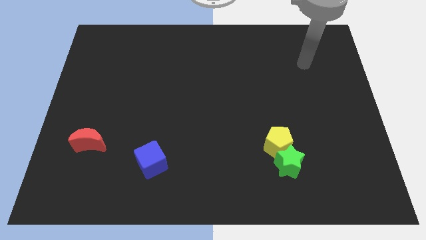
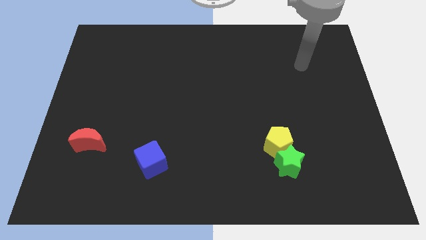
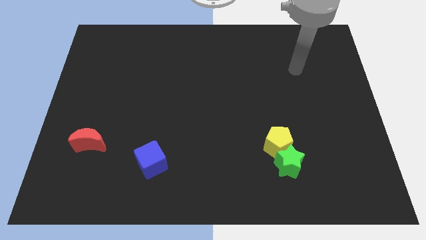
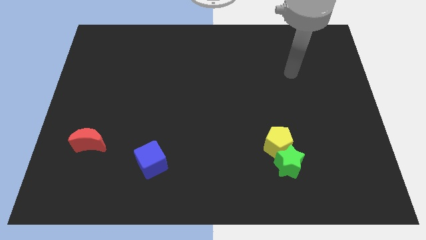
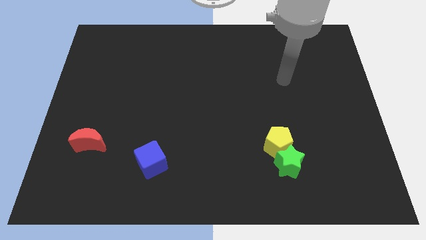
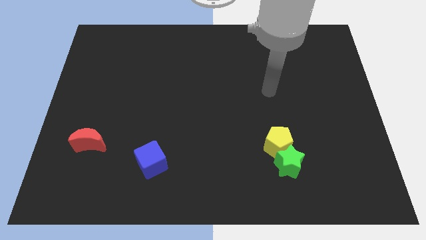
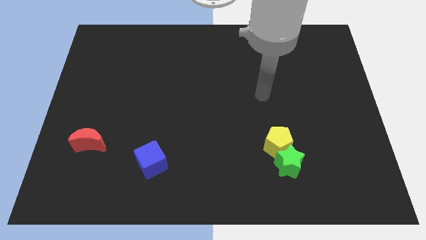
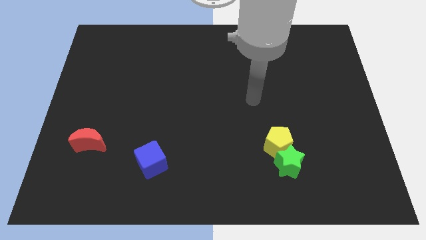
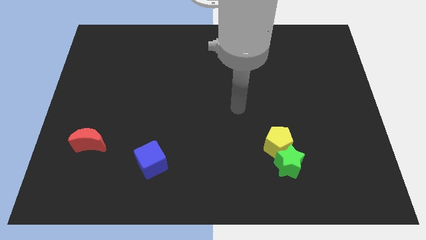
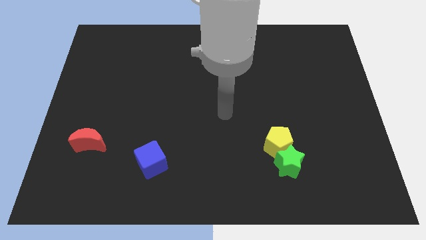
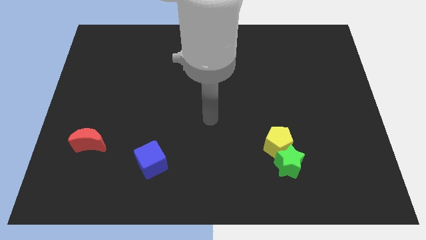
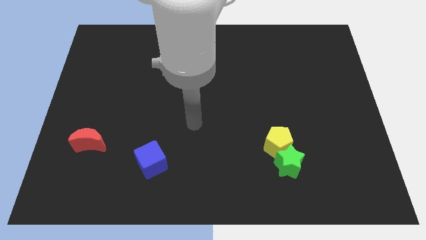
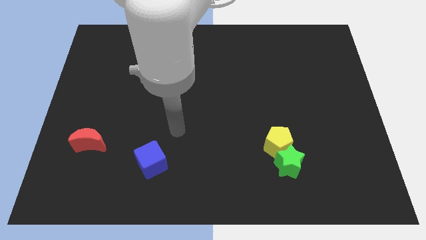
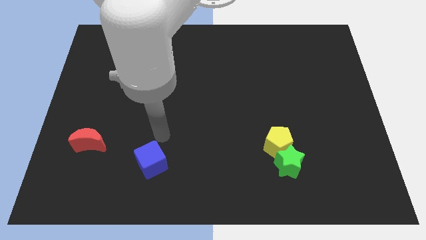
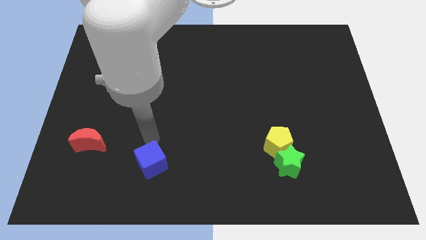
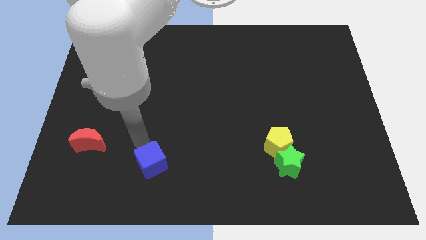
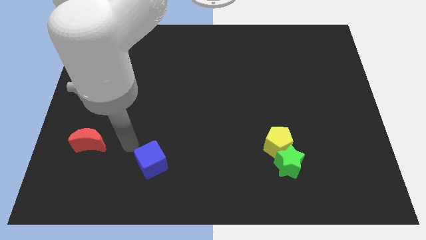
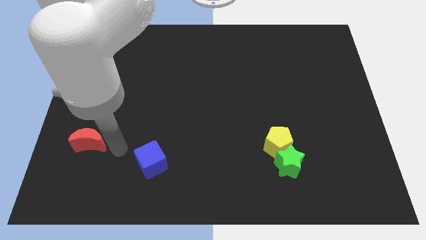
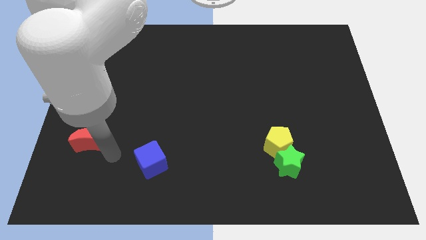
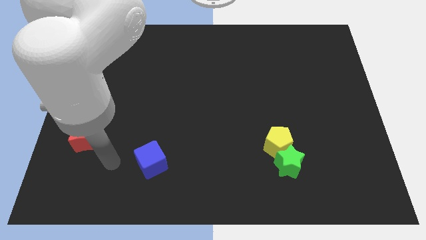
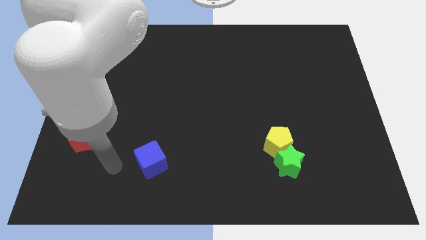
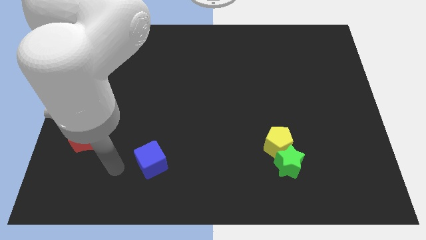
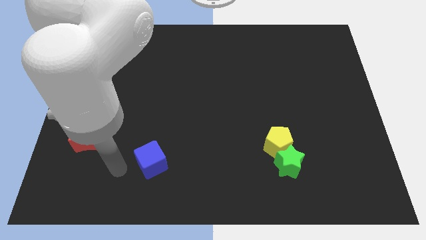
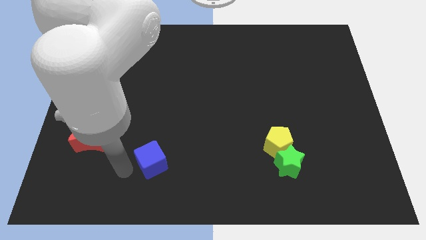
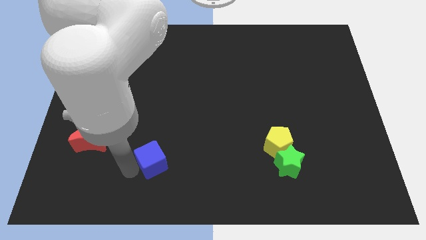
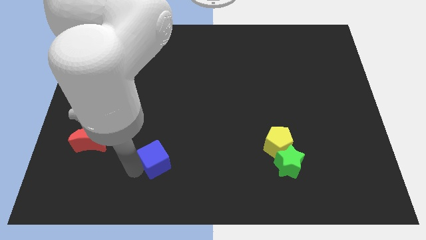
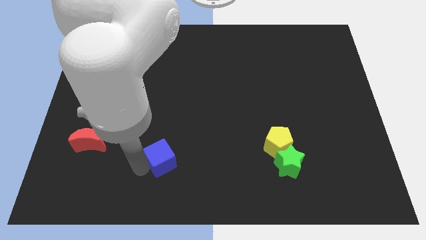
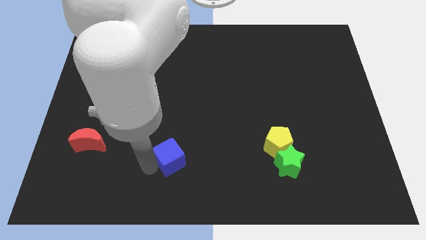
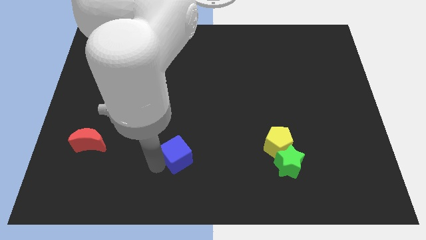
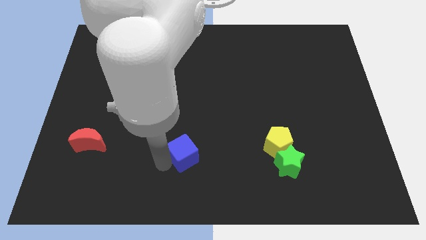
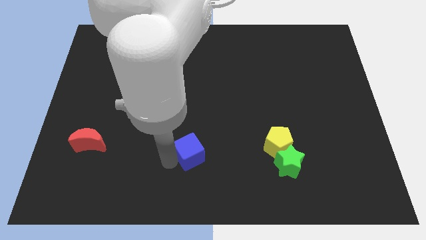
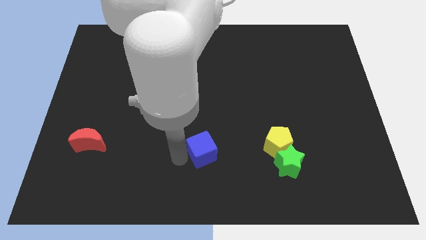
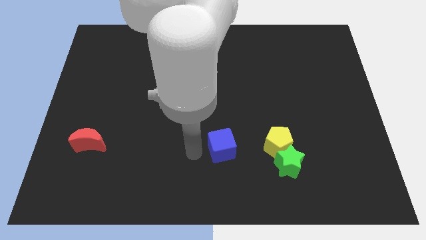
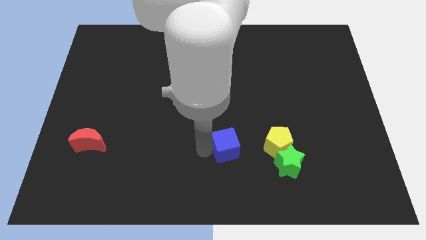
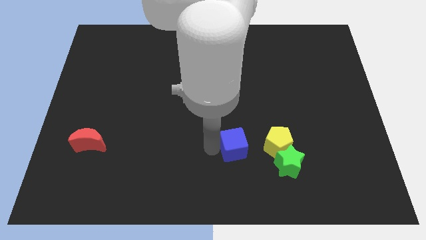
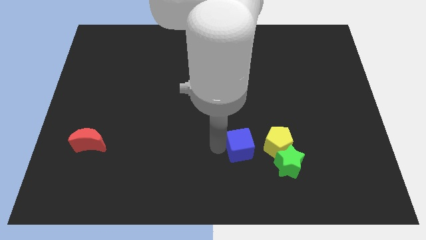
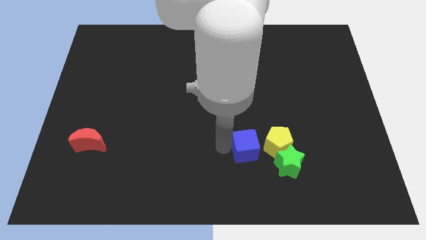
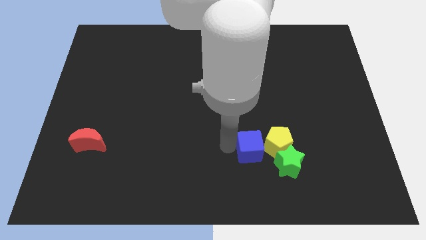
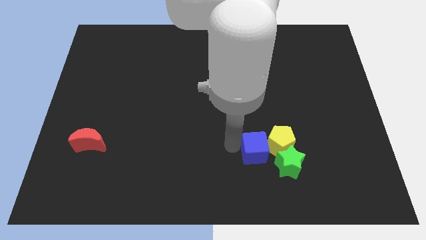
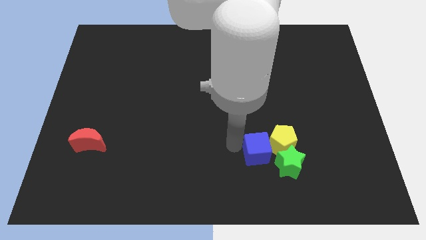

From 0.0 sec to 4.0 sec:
put the cube next to the yellow block

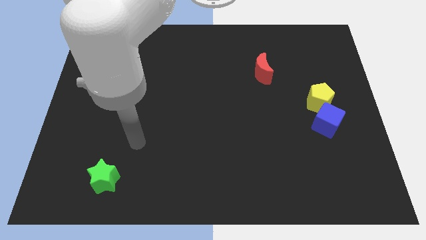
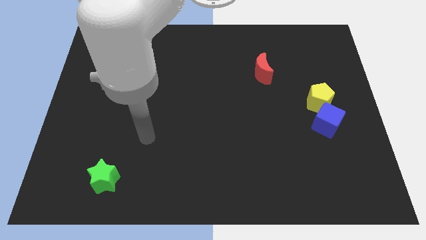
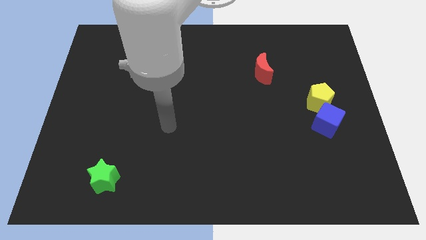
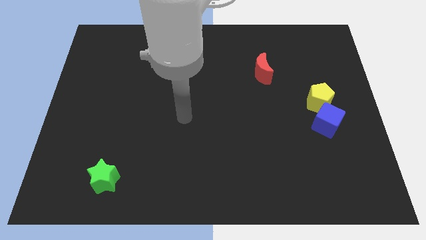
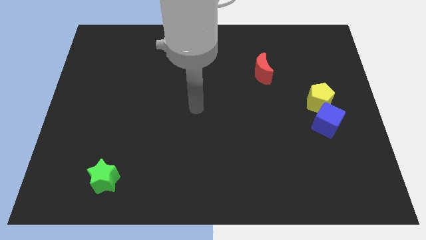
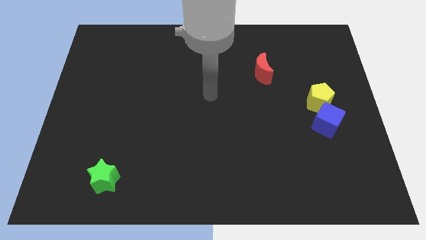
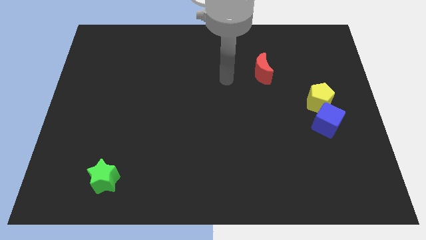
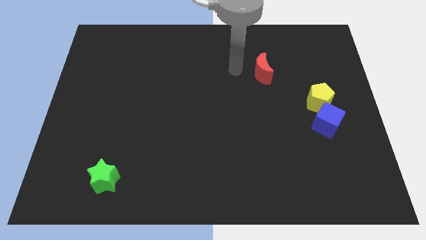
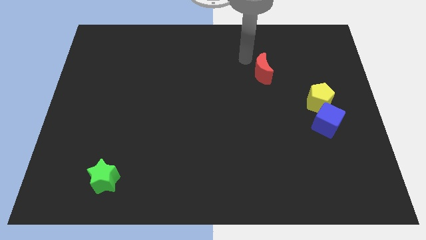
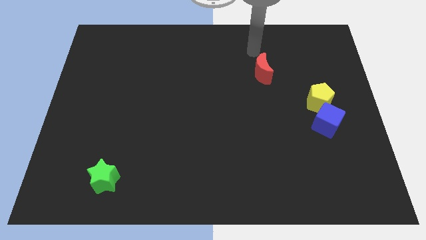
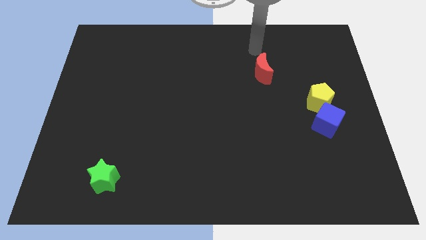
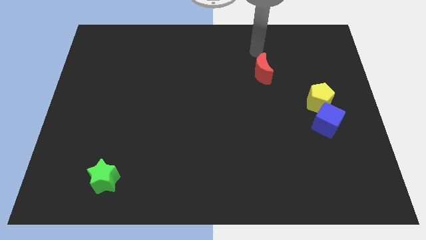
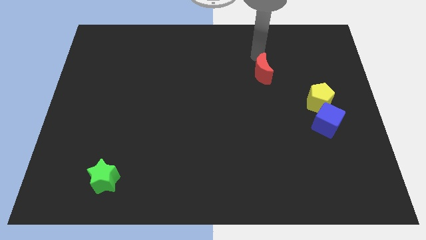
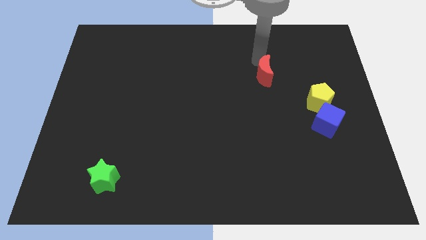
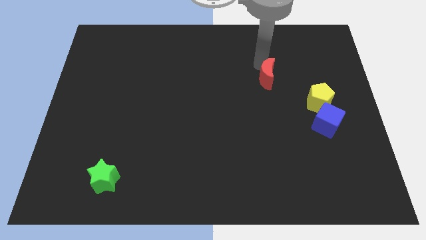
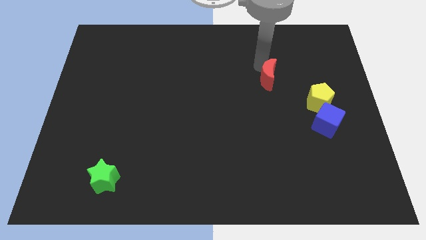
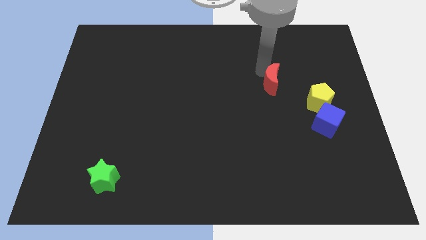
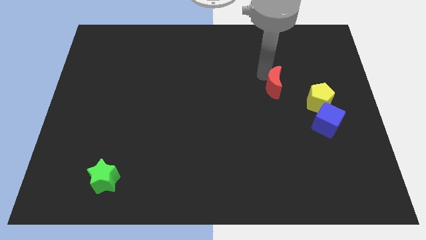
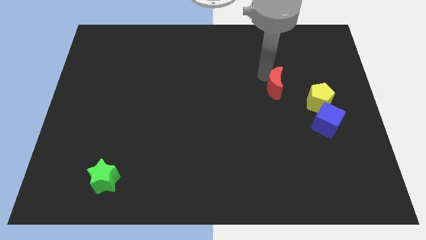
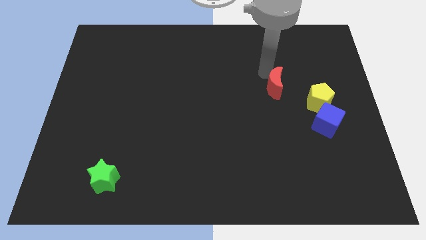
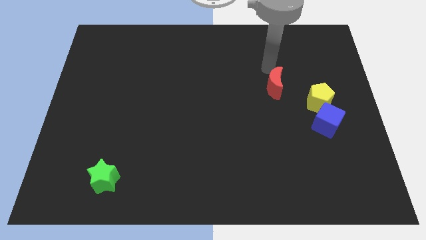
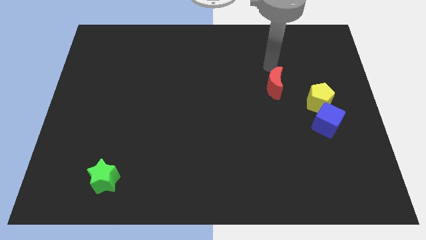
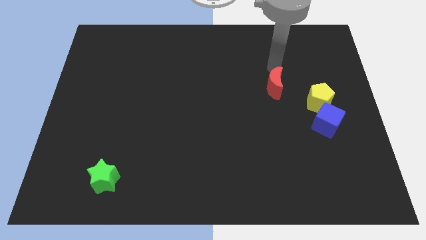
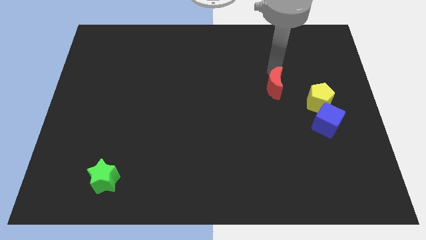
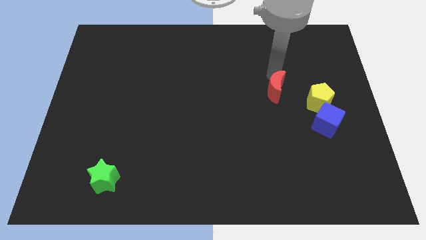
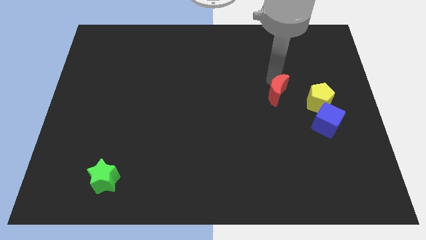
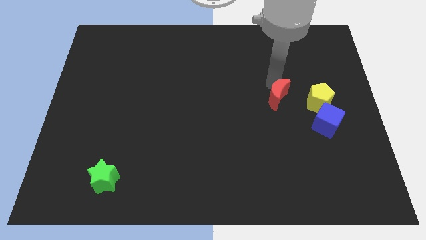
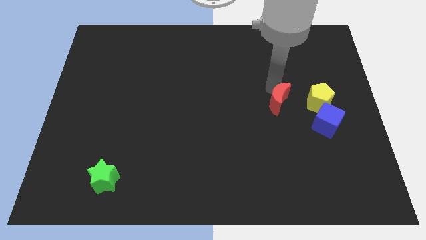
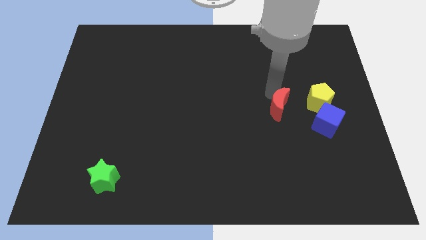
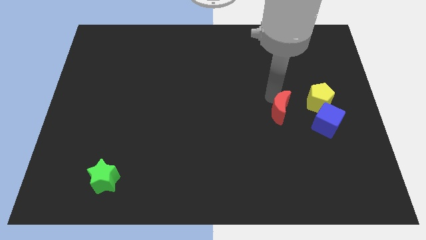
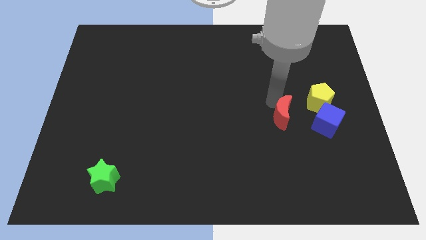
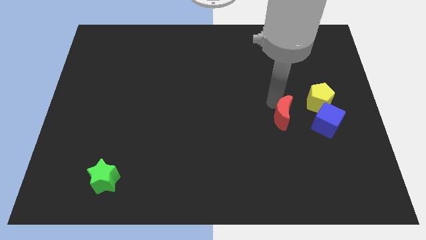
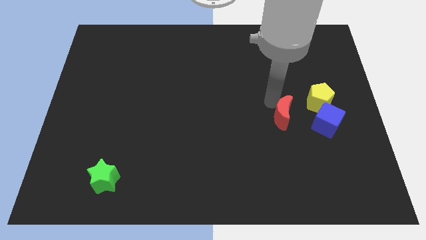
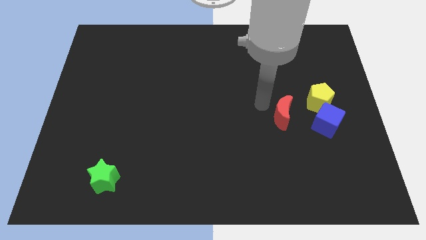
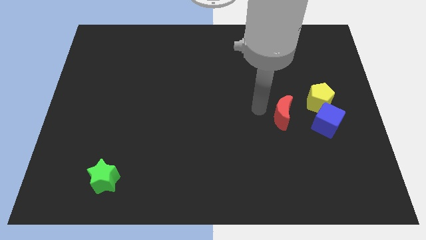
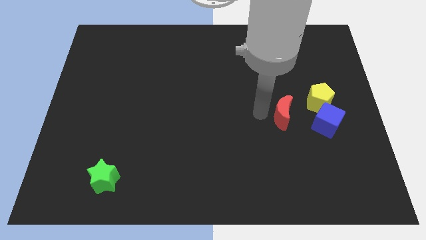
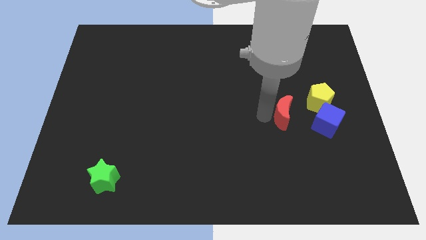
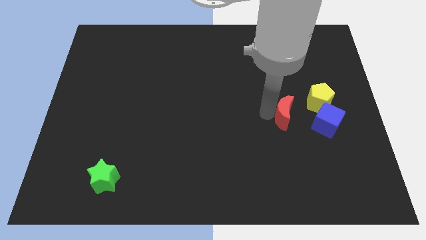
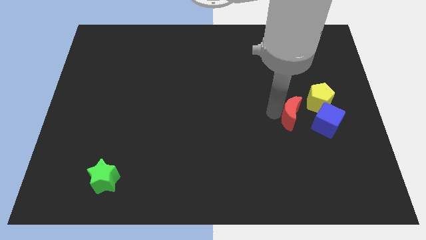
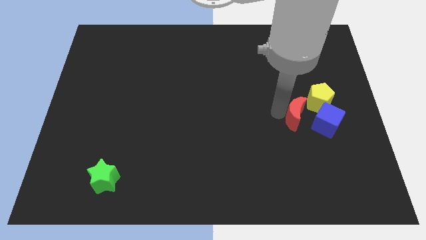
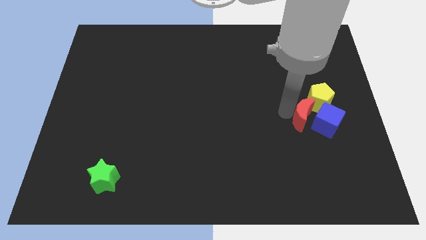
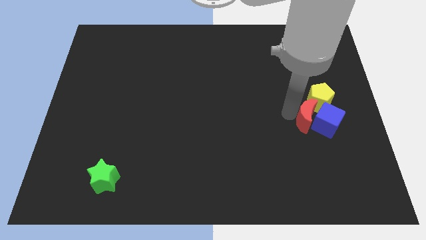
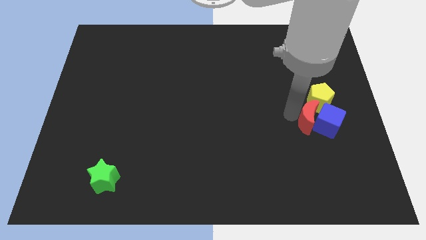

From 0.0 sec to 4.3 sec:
put the moon close to the blue cube

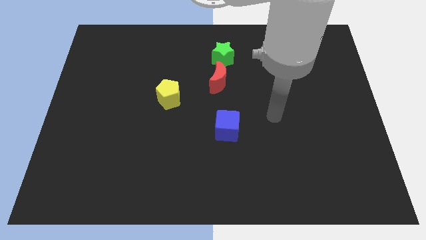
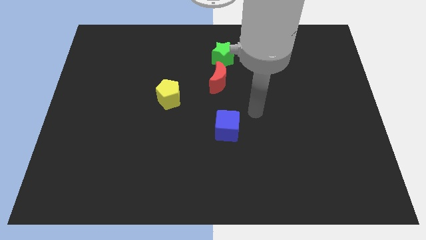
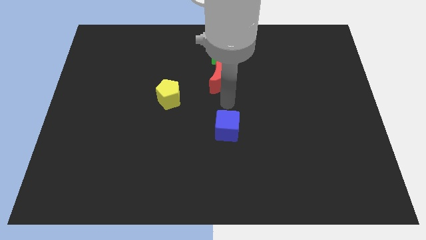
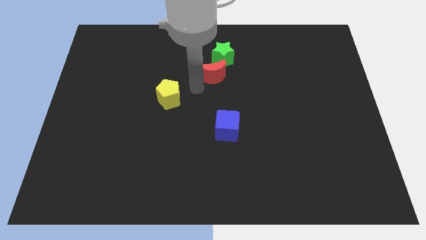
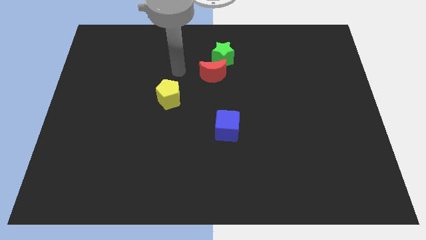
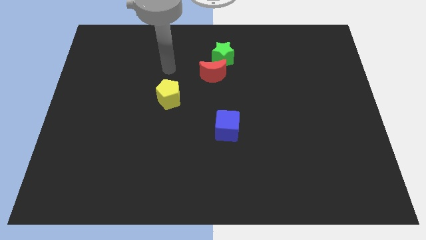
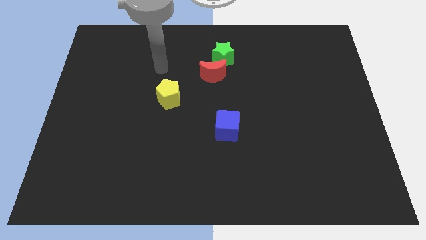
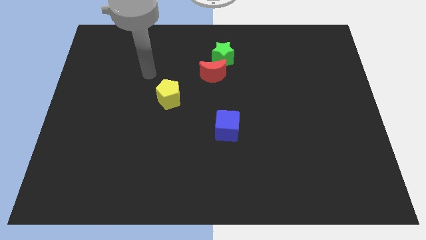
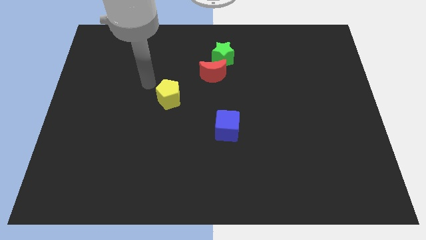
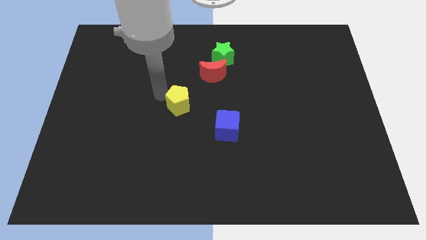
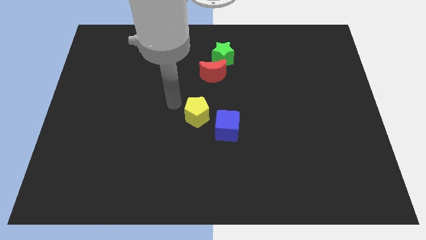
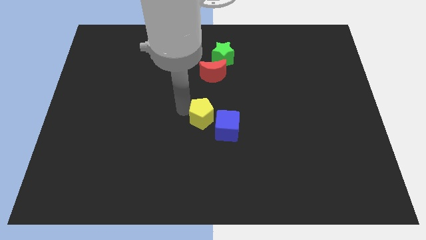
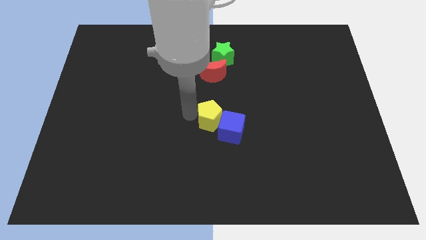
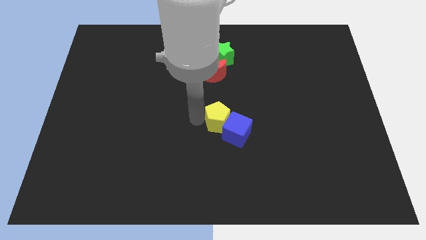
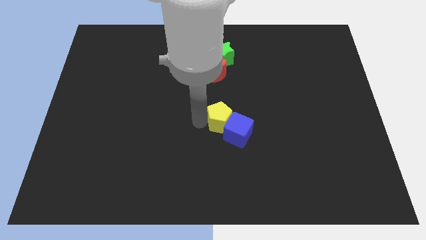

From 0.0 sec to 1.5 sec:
put the yellow pentagon to the cube
